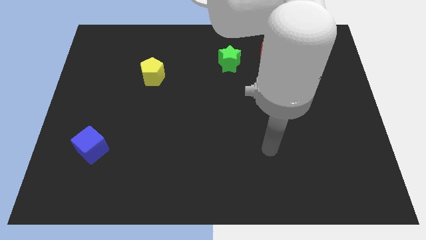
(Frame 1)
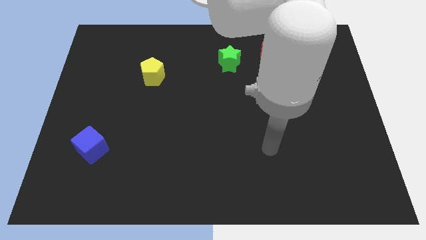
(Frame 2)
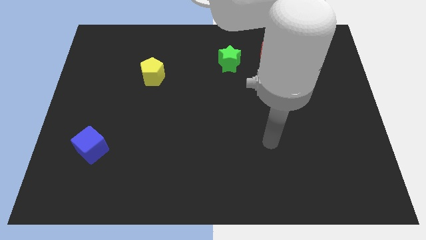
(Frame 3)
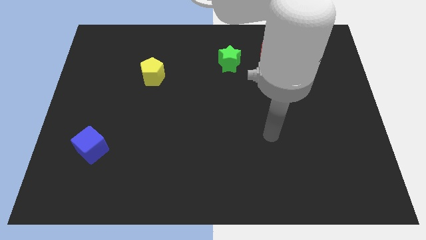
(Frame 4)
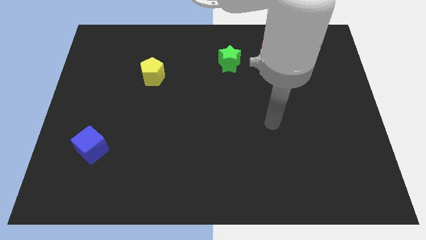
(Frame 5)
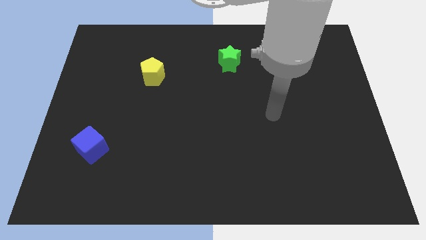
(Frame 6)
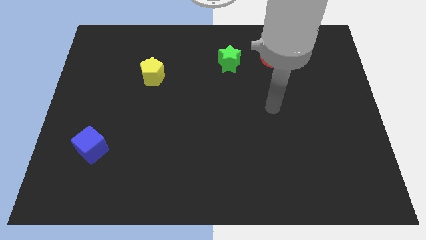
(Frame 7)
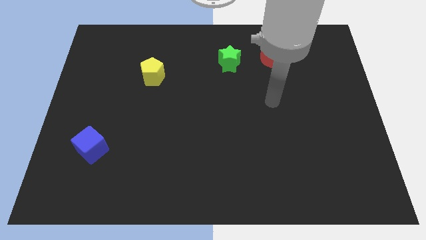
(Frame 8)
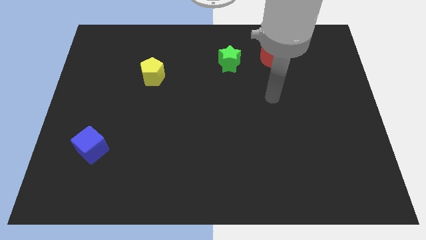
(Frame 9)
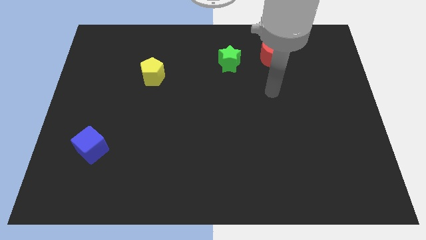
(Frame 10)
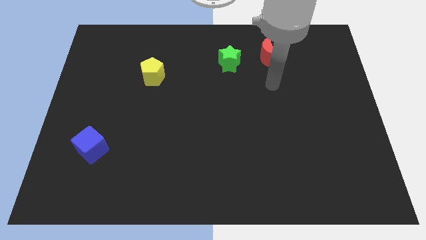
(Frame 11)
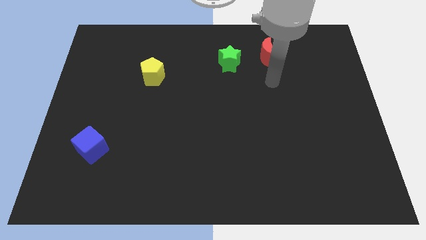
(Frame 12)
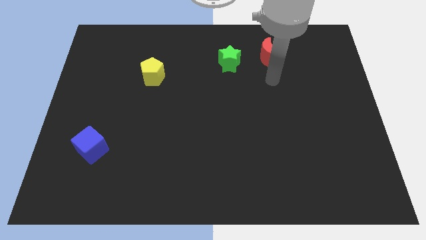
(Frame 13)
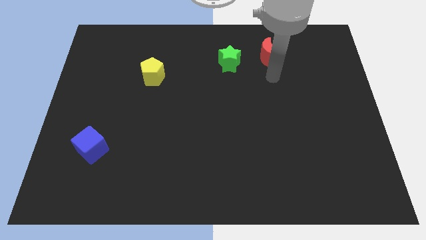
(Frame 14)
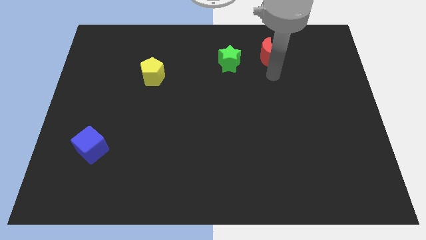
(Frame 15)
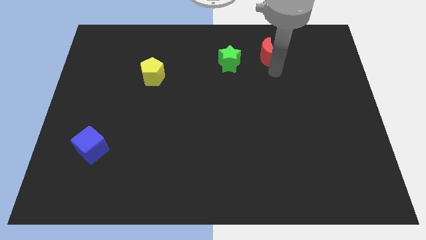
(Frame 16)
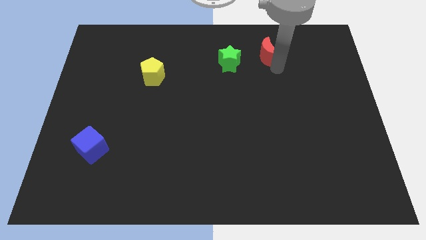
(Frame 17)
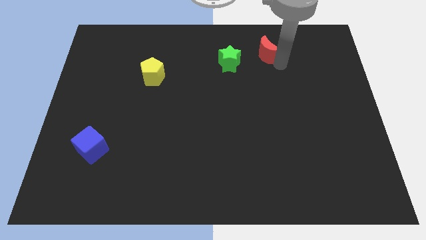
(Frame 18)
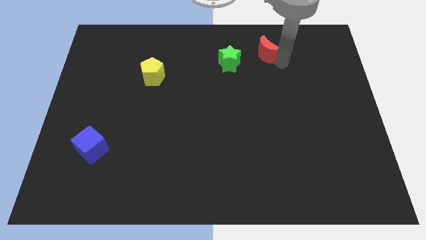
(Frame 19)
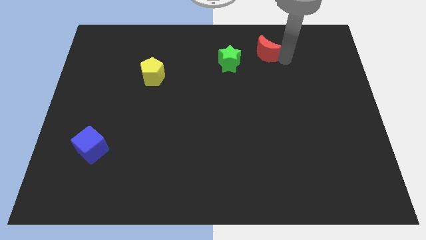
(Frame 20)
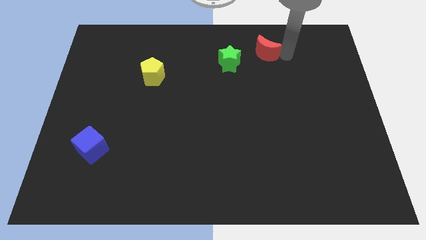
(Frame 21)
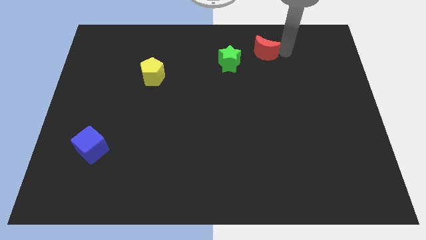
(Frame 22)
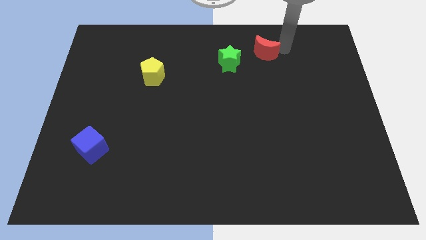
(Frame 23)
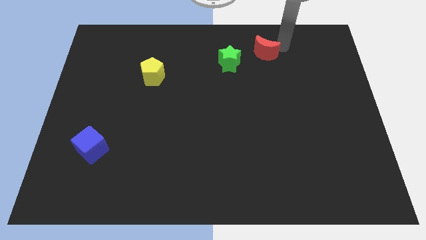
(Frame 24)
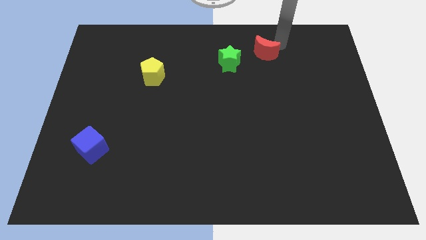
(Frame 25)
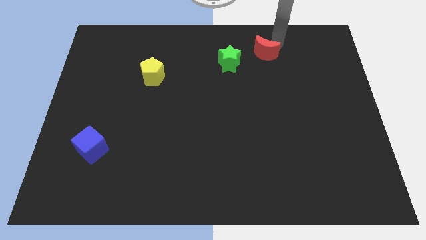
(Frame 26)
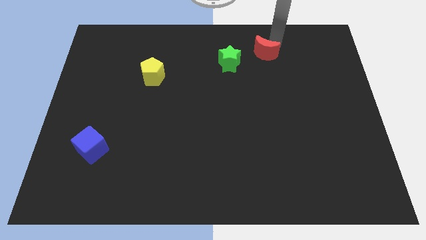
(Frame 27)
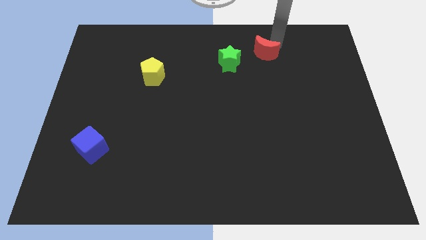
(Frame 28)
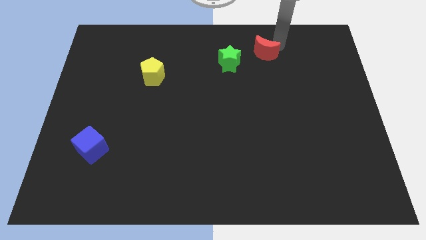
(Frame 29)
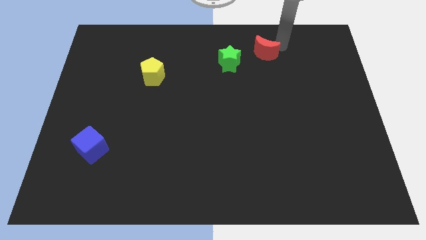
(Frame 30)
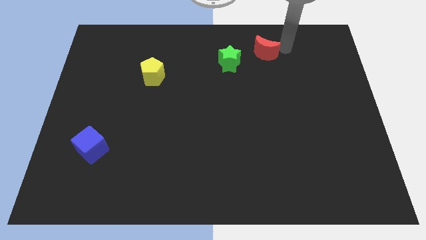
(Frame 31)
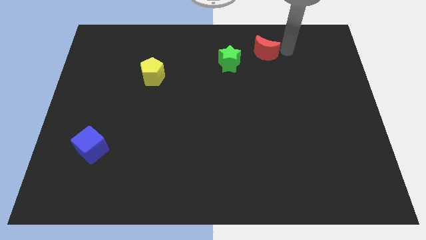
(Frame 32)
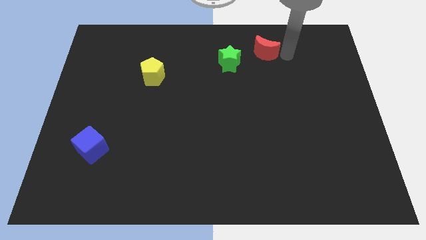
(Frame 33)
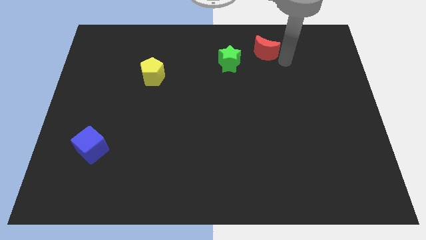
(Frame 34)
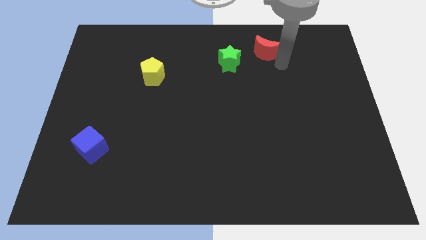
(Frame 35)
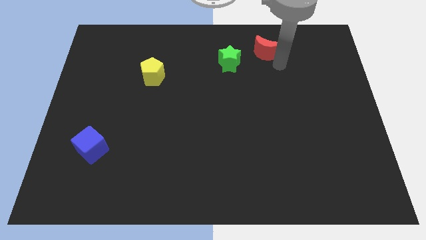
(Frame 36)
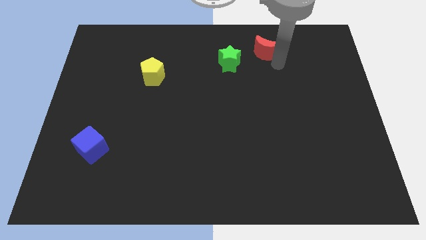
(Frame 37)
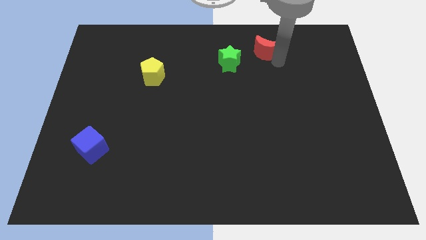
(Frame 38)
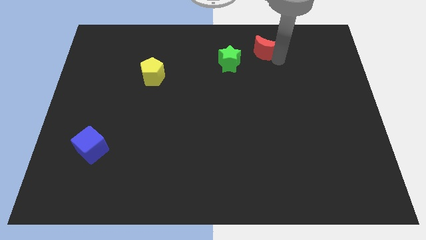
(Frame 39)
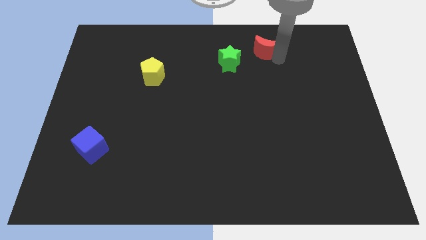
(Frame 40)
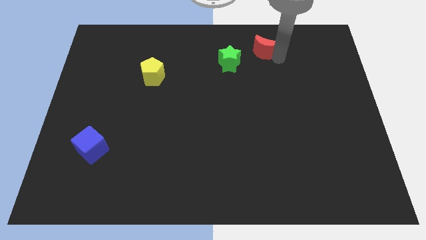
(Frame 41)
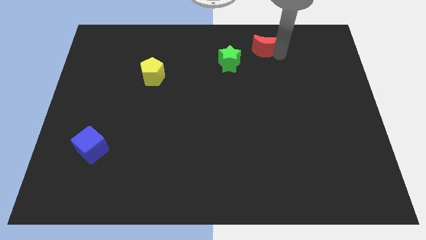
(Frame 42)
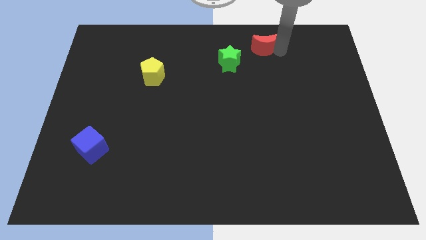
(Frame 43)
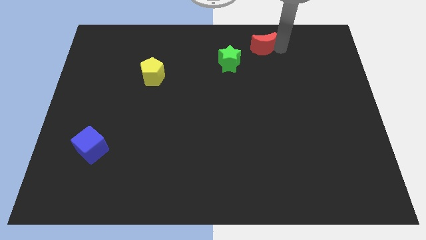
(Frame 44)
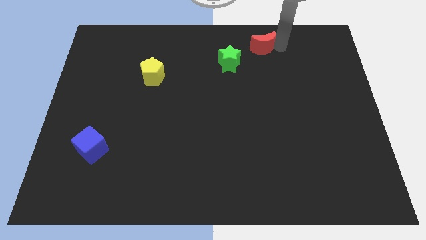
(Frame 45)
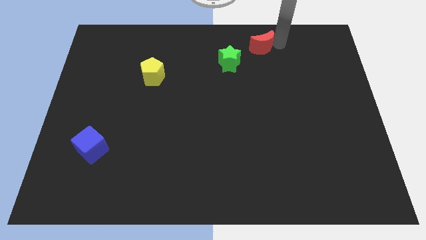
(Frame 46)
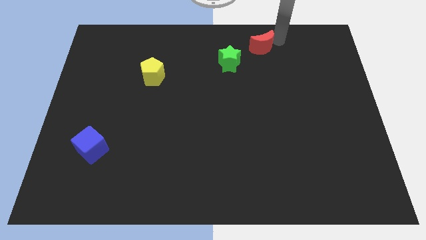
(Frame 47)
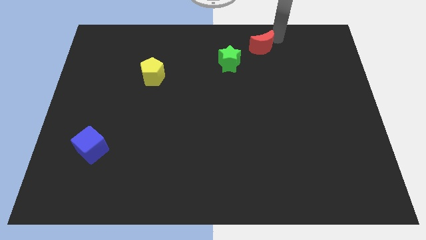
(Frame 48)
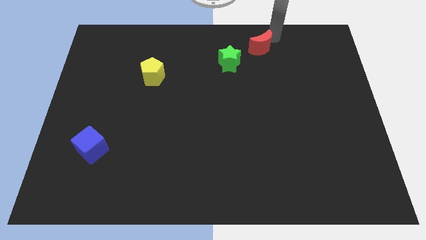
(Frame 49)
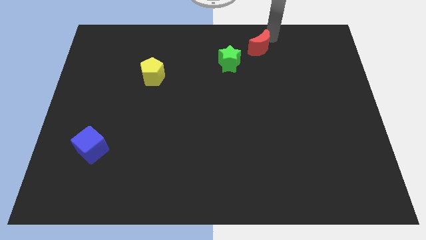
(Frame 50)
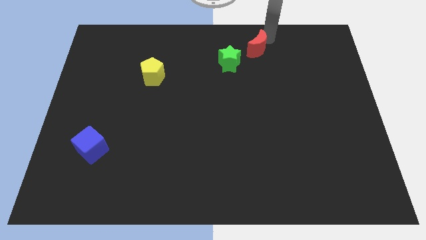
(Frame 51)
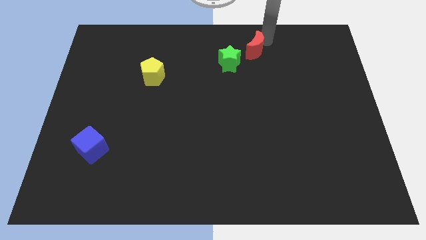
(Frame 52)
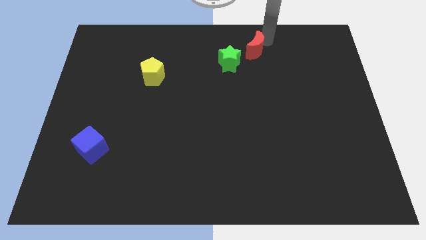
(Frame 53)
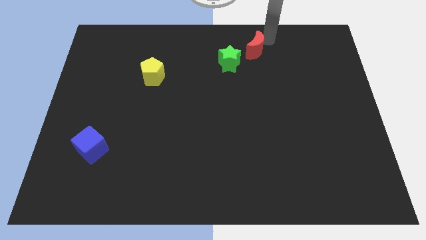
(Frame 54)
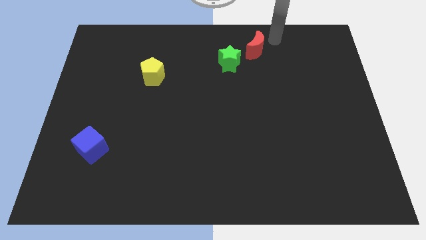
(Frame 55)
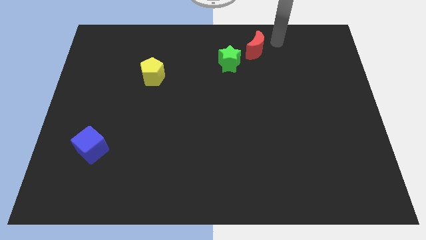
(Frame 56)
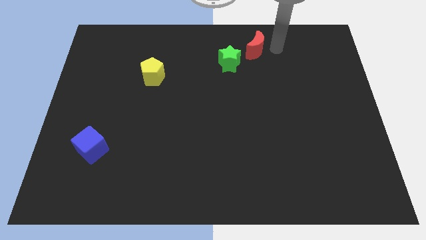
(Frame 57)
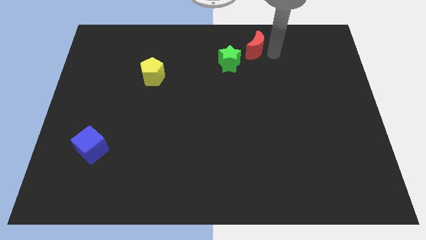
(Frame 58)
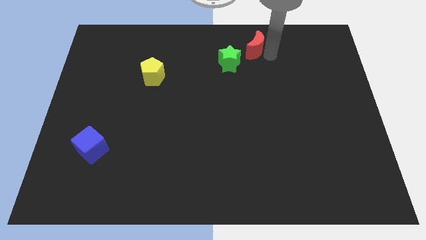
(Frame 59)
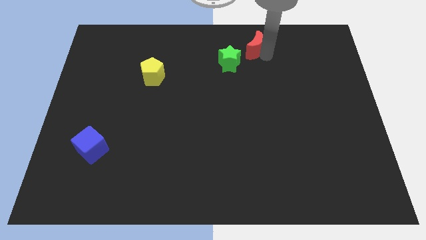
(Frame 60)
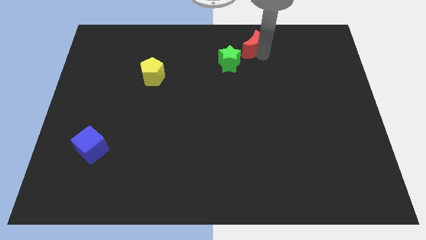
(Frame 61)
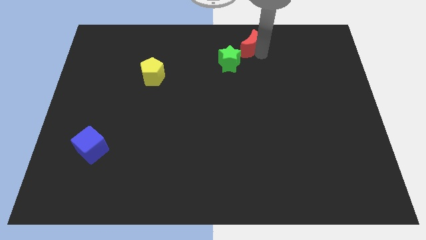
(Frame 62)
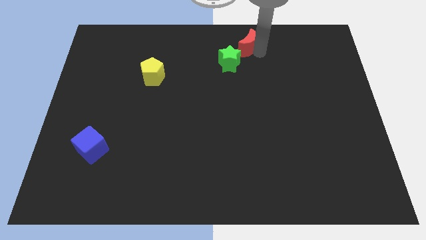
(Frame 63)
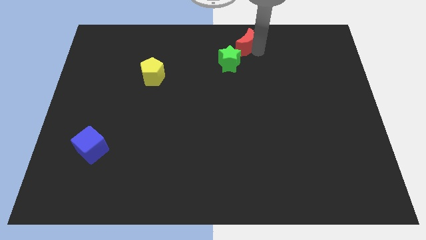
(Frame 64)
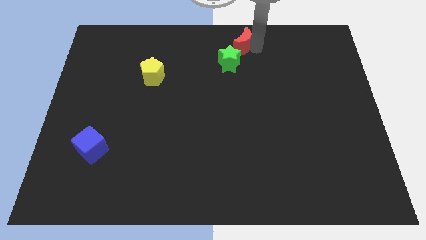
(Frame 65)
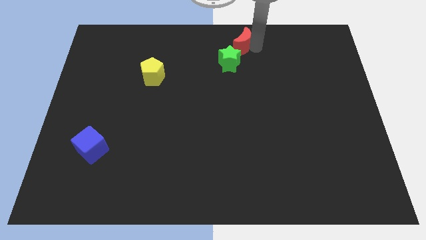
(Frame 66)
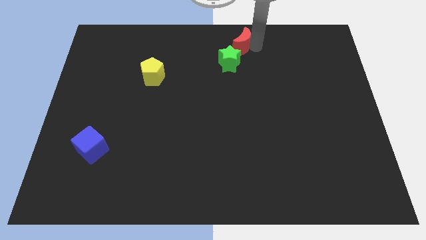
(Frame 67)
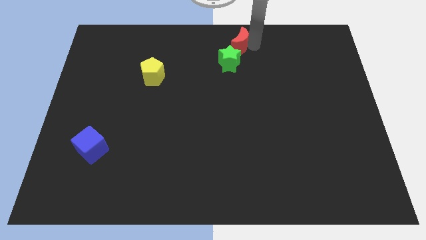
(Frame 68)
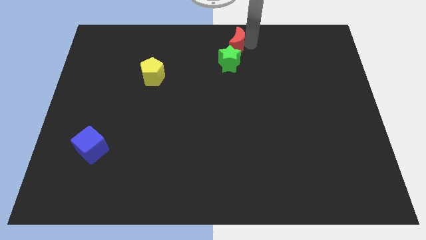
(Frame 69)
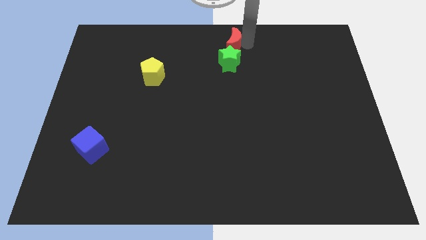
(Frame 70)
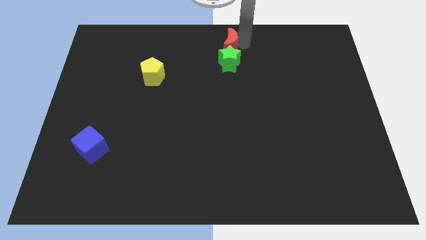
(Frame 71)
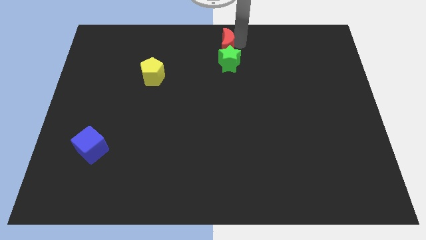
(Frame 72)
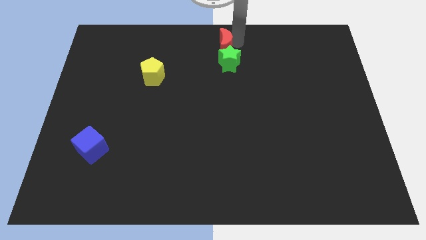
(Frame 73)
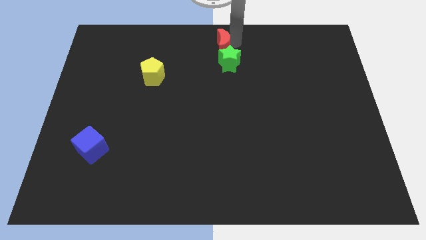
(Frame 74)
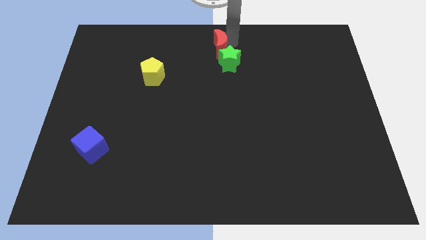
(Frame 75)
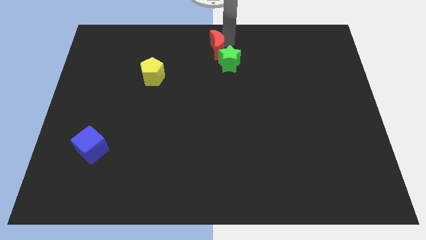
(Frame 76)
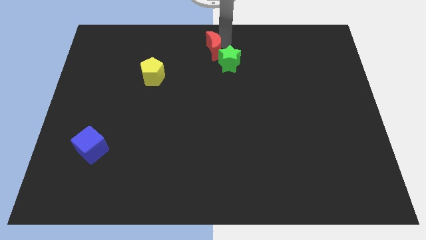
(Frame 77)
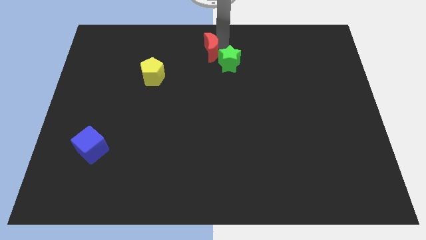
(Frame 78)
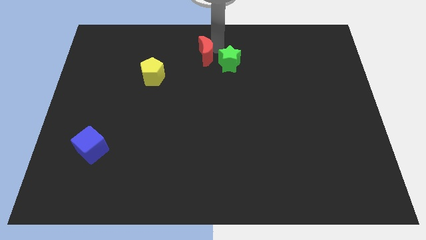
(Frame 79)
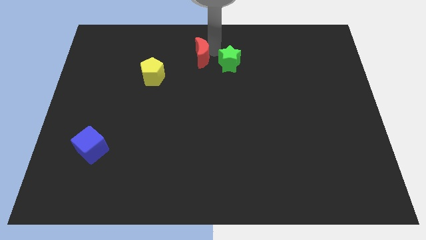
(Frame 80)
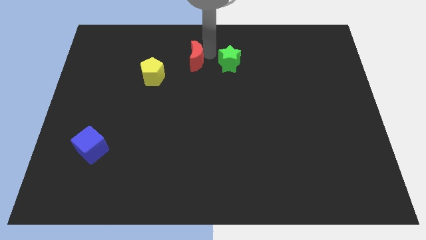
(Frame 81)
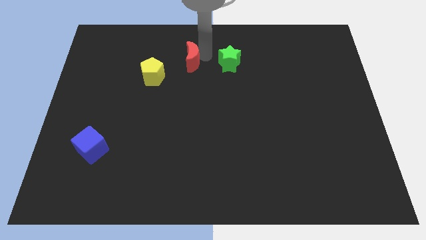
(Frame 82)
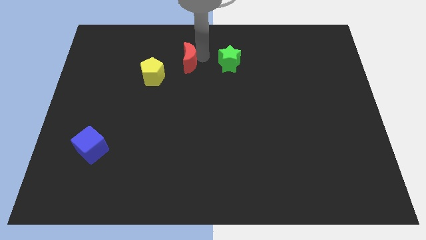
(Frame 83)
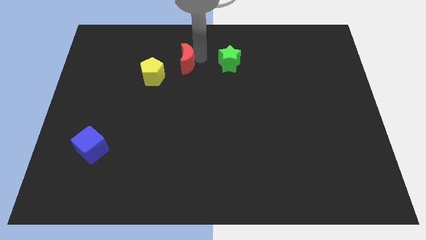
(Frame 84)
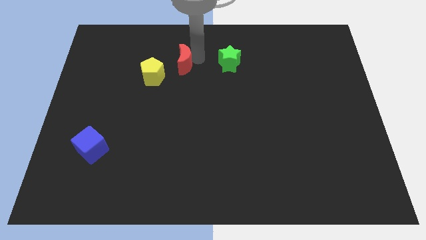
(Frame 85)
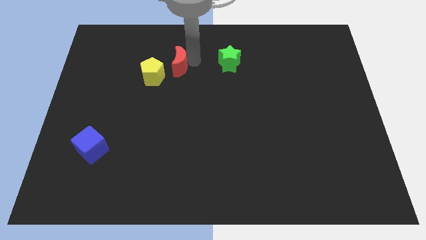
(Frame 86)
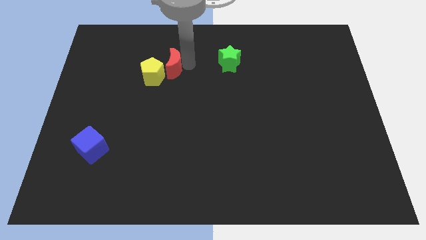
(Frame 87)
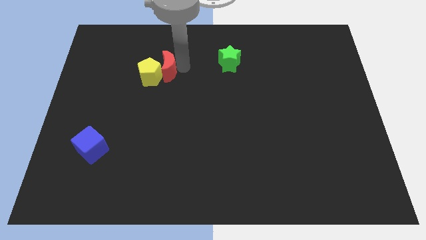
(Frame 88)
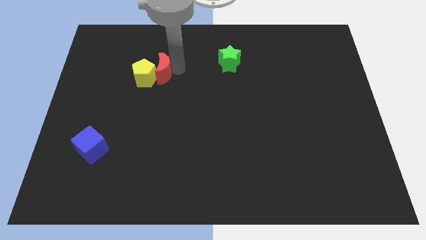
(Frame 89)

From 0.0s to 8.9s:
push the red moon close to the yellow pentagon
